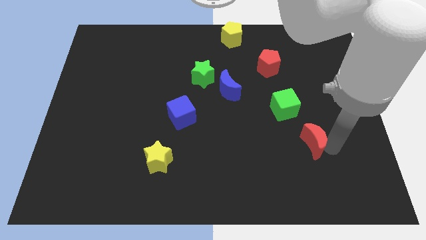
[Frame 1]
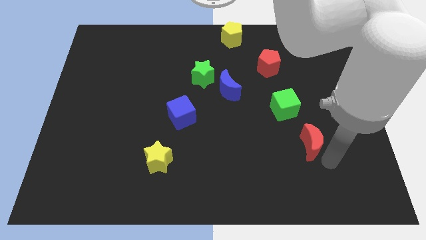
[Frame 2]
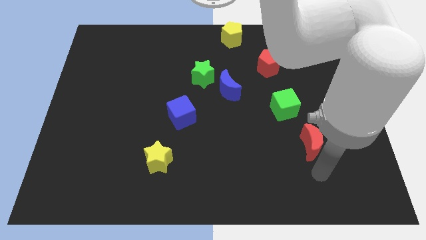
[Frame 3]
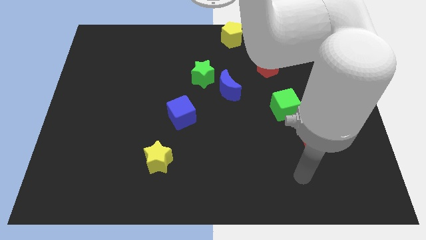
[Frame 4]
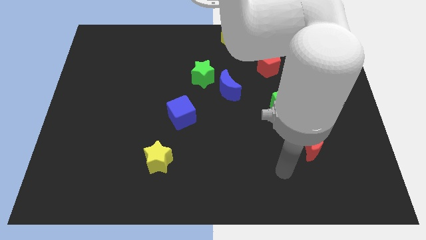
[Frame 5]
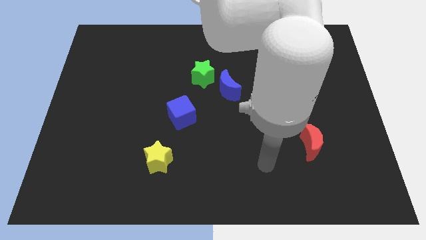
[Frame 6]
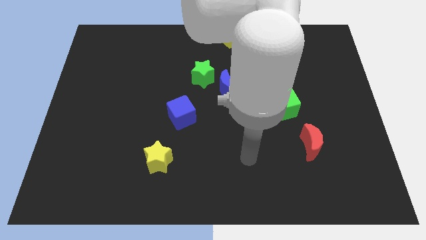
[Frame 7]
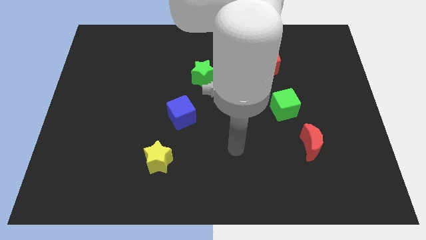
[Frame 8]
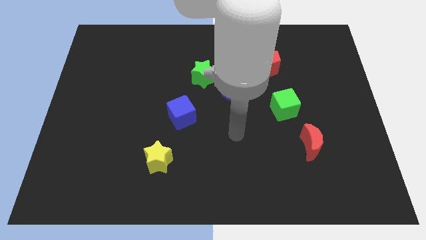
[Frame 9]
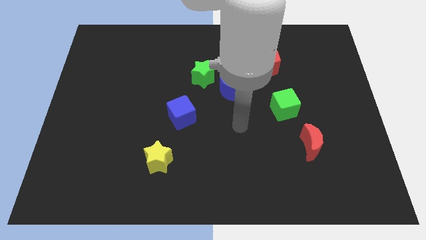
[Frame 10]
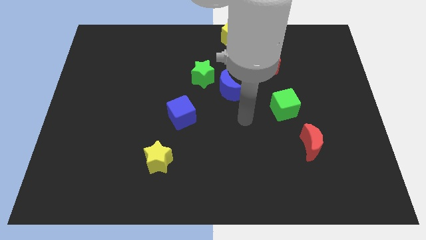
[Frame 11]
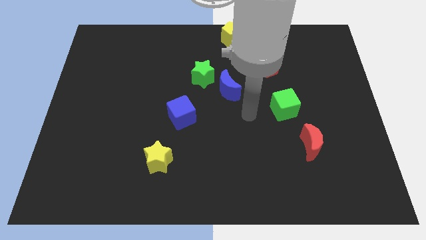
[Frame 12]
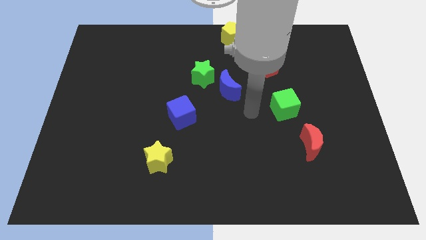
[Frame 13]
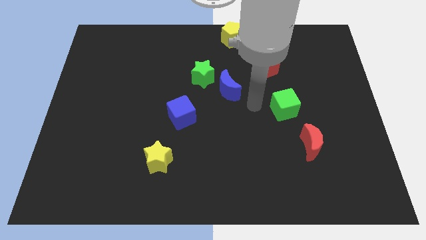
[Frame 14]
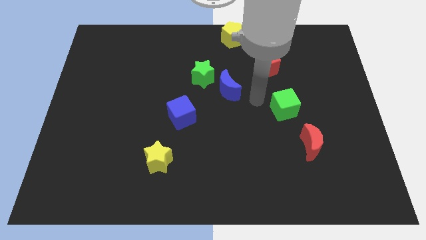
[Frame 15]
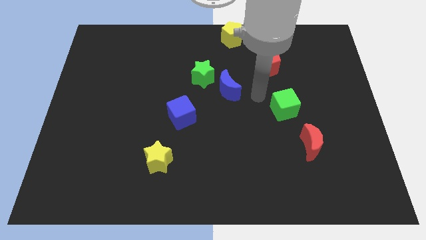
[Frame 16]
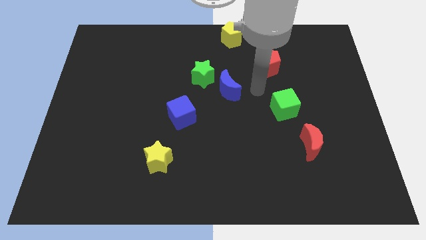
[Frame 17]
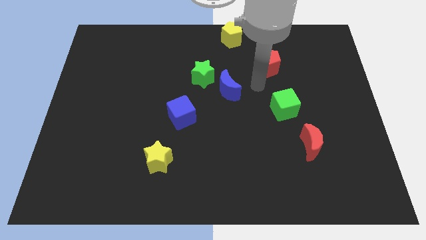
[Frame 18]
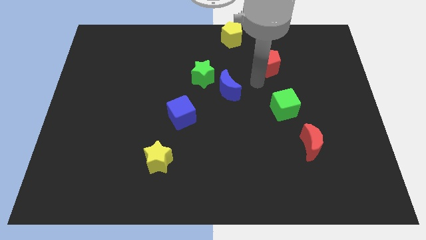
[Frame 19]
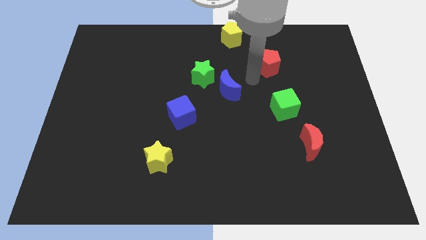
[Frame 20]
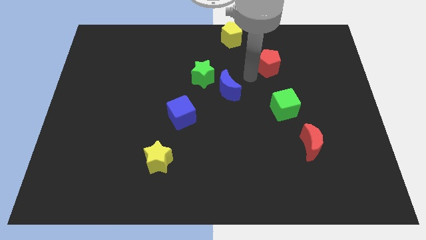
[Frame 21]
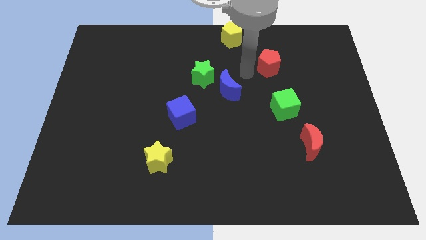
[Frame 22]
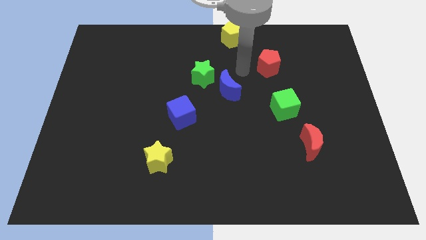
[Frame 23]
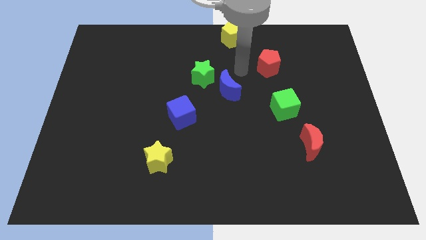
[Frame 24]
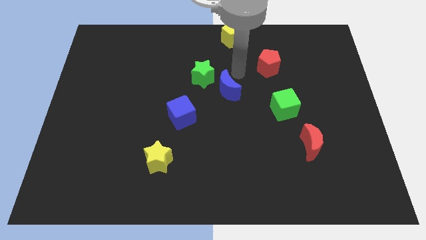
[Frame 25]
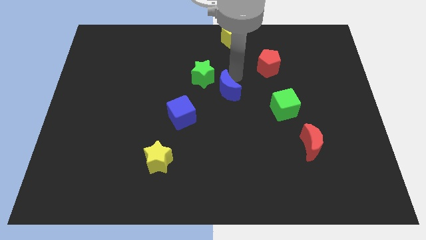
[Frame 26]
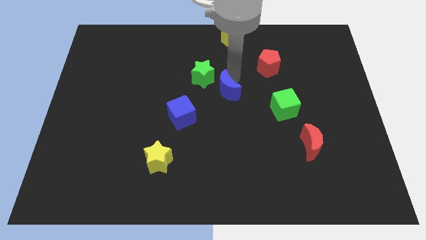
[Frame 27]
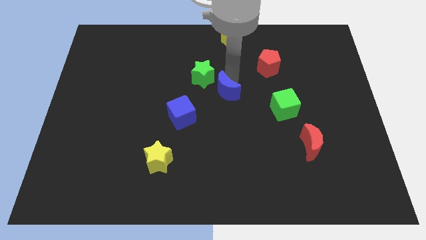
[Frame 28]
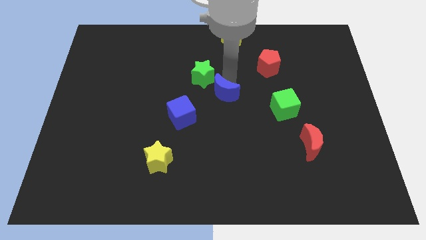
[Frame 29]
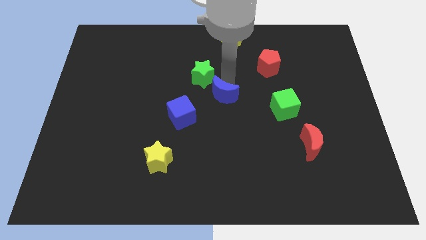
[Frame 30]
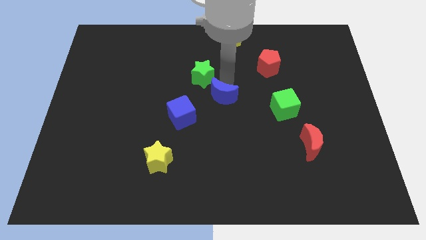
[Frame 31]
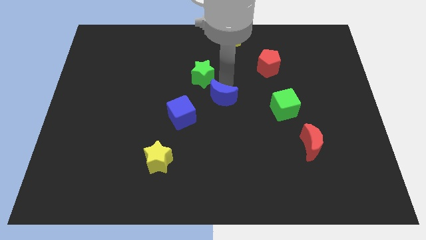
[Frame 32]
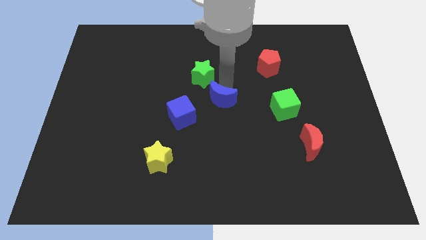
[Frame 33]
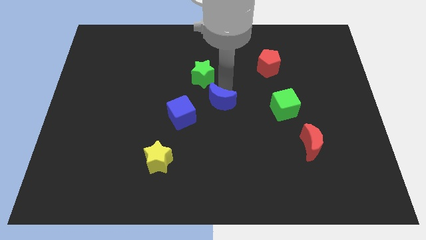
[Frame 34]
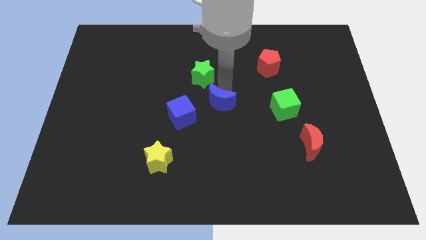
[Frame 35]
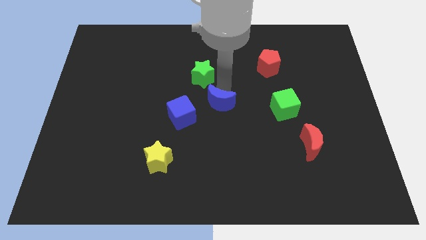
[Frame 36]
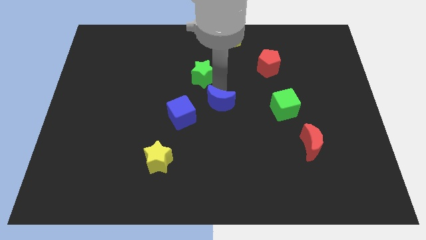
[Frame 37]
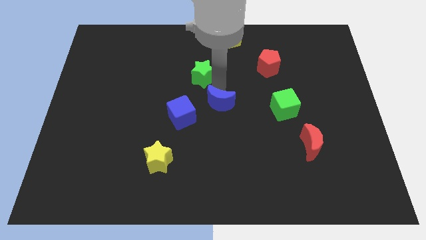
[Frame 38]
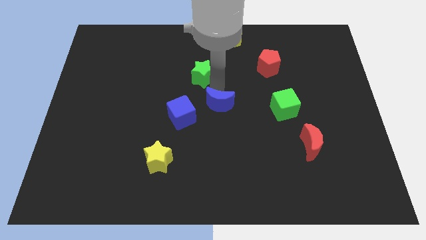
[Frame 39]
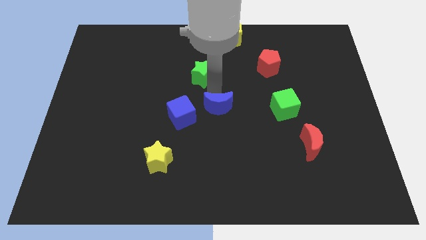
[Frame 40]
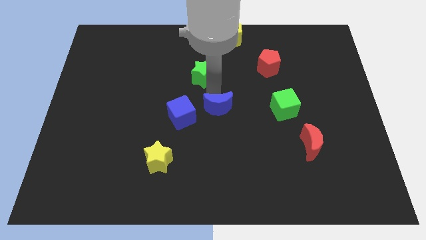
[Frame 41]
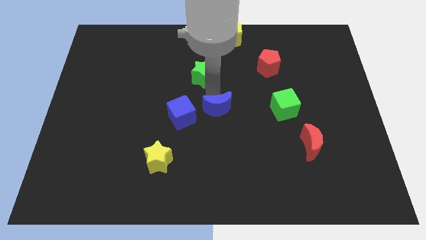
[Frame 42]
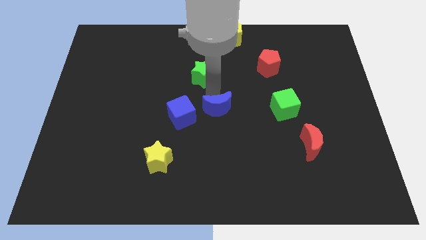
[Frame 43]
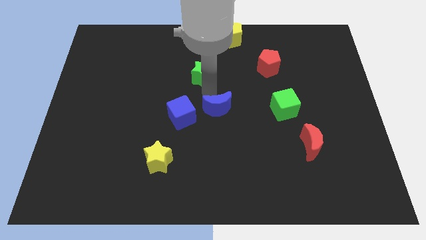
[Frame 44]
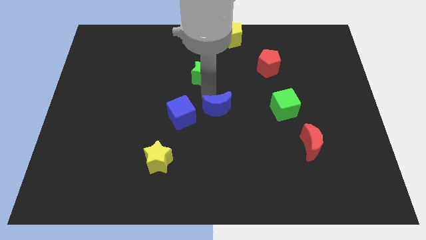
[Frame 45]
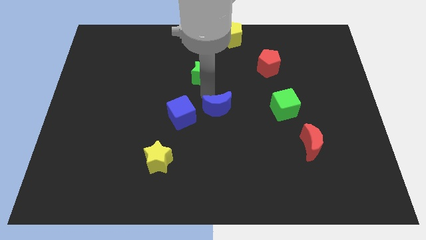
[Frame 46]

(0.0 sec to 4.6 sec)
put the blue moon parallel to the blue cube

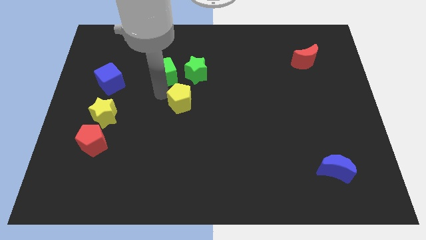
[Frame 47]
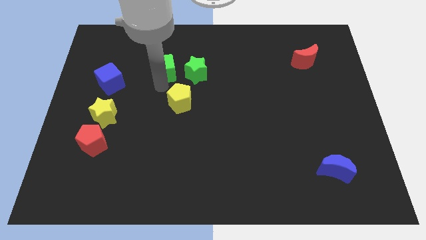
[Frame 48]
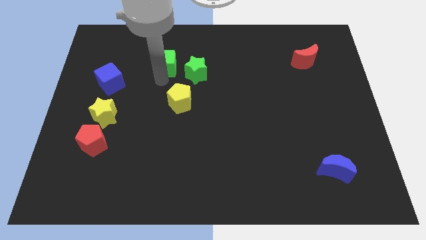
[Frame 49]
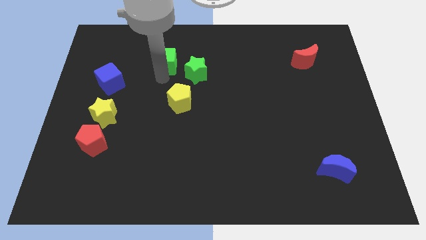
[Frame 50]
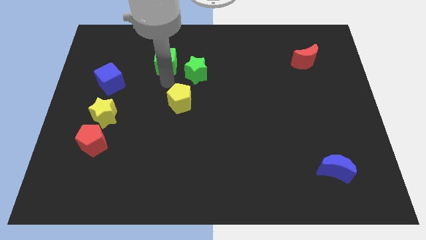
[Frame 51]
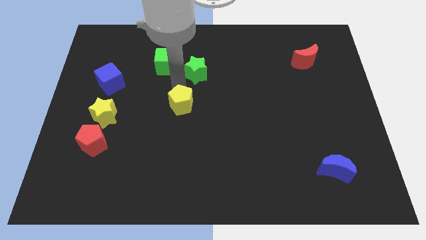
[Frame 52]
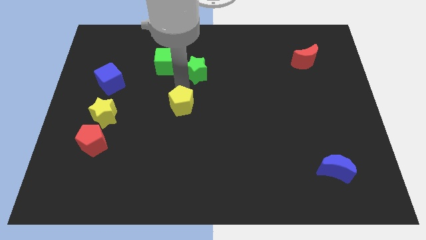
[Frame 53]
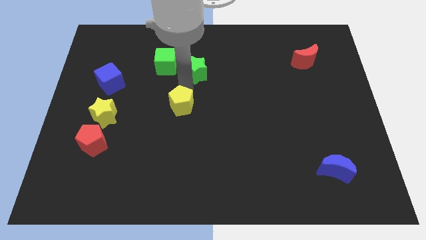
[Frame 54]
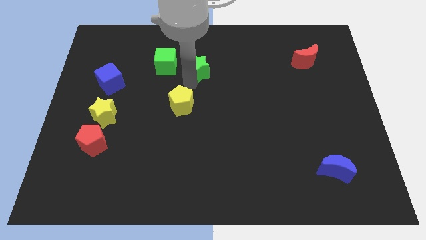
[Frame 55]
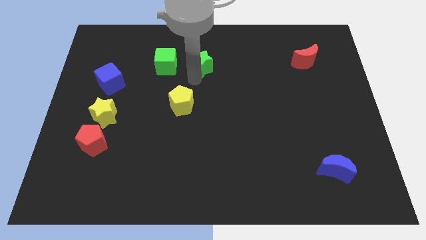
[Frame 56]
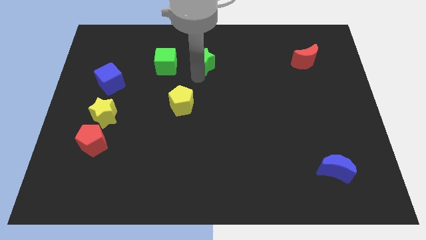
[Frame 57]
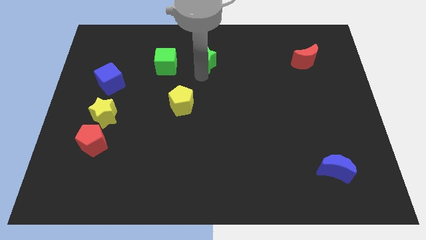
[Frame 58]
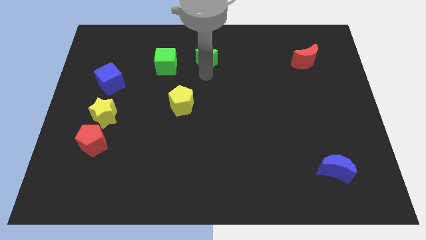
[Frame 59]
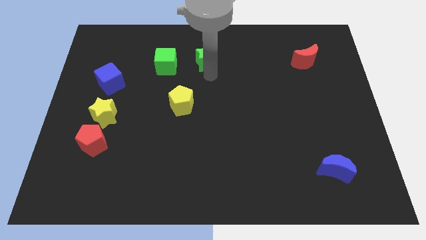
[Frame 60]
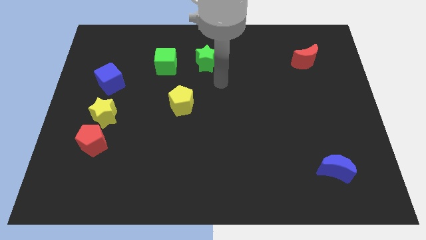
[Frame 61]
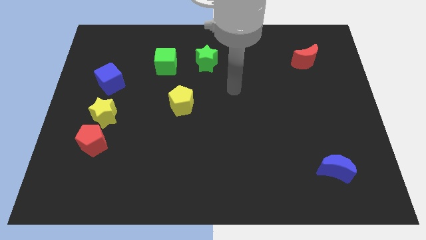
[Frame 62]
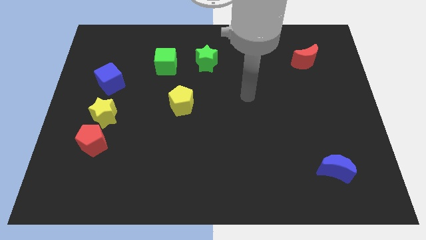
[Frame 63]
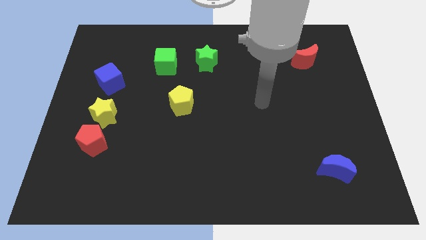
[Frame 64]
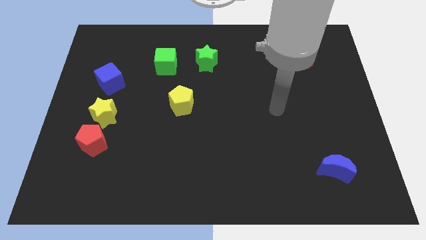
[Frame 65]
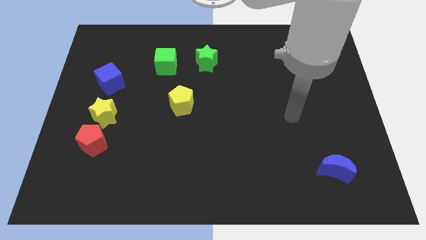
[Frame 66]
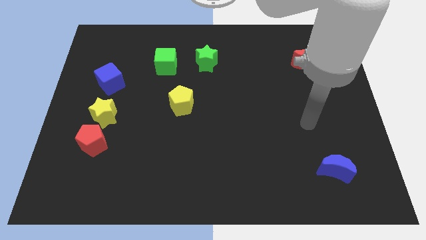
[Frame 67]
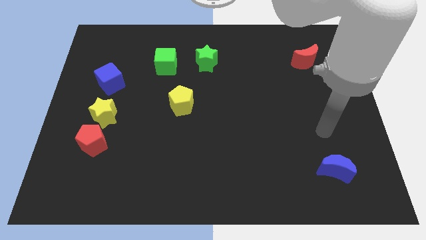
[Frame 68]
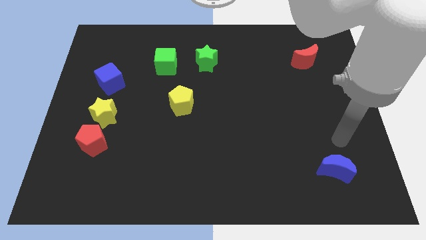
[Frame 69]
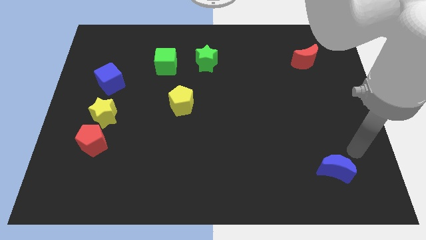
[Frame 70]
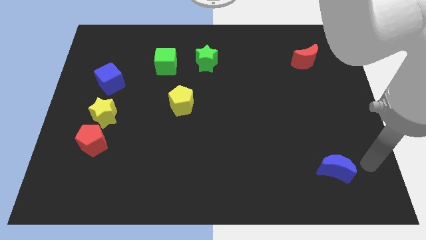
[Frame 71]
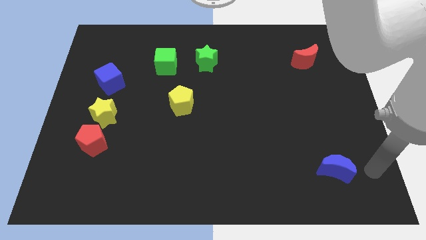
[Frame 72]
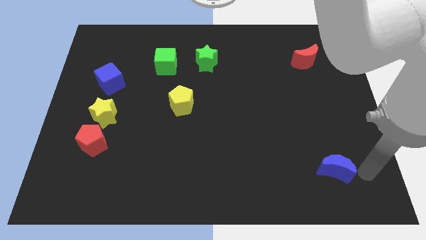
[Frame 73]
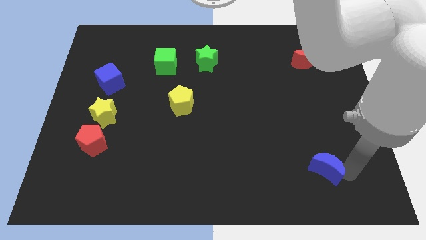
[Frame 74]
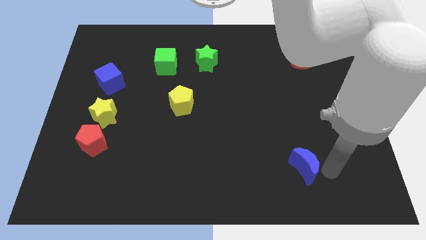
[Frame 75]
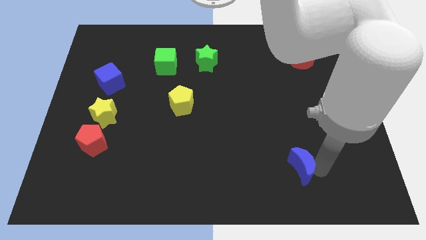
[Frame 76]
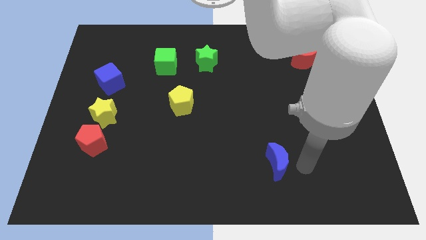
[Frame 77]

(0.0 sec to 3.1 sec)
slightly push the green star to the top

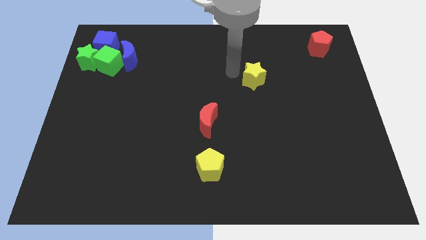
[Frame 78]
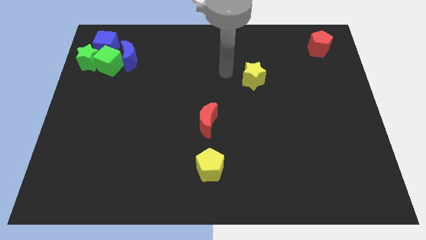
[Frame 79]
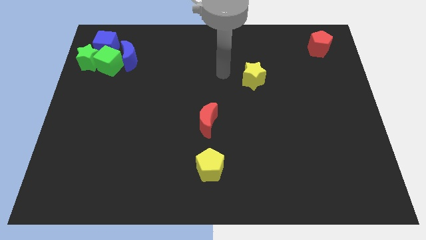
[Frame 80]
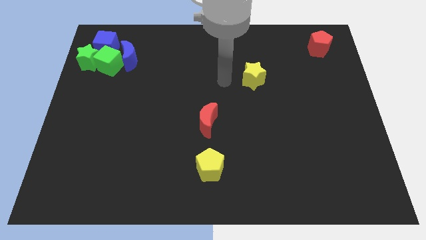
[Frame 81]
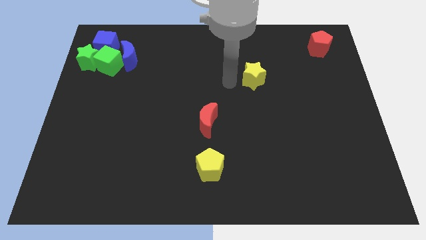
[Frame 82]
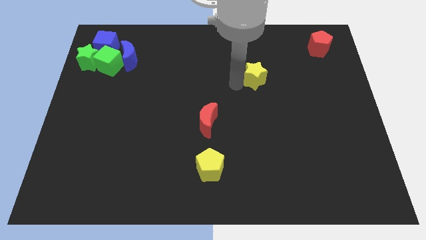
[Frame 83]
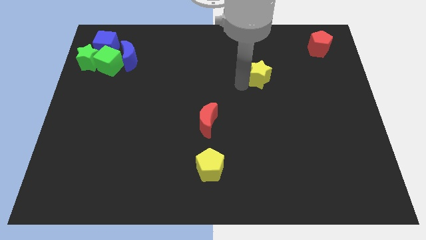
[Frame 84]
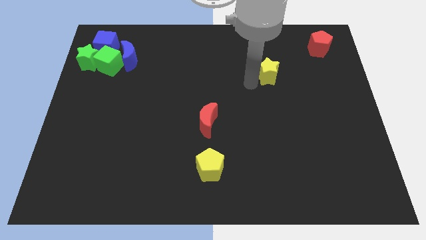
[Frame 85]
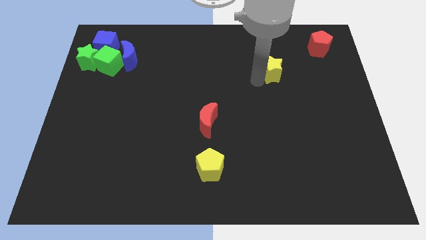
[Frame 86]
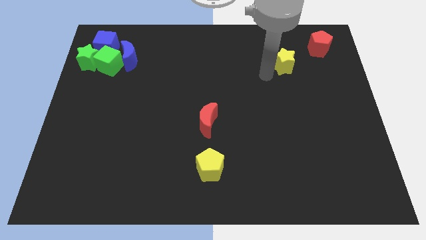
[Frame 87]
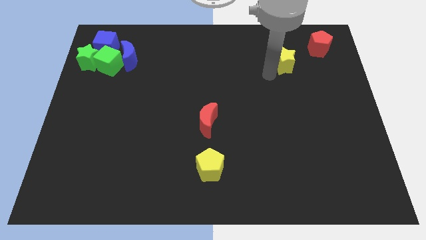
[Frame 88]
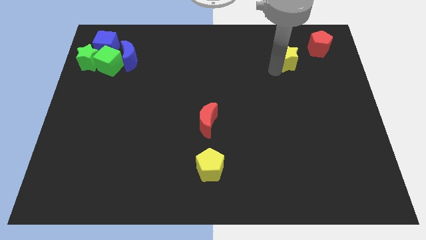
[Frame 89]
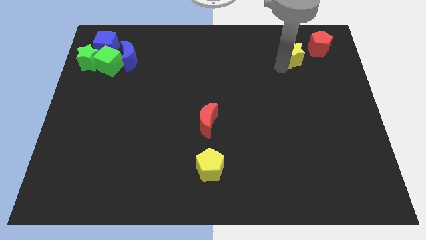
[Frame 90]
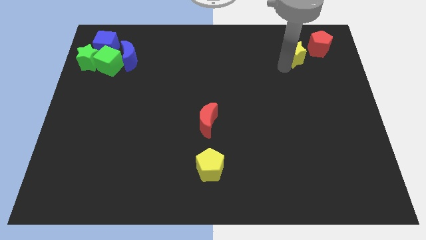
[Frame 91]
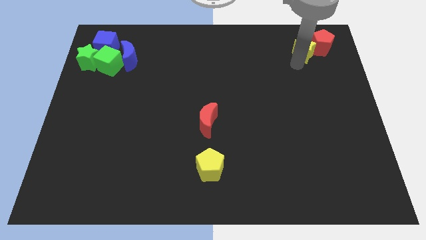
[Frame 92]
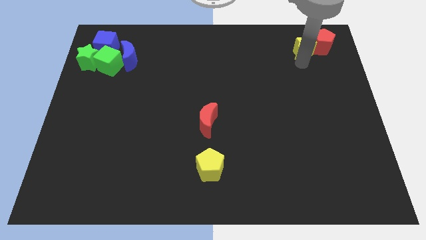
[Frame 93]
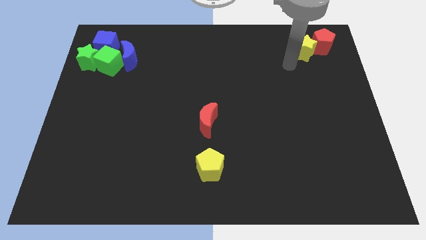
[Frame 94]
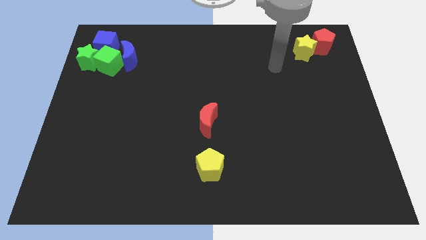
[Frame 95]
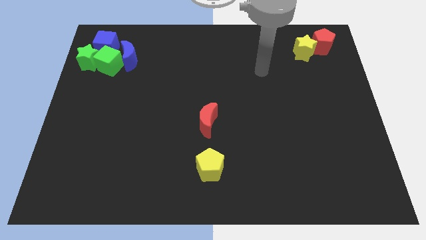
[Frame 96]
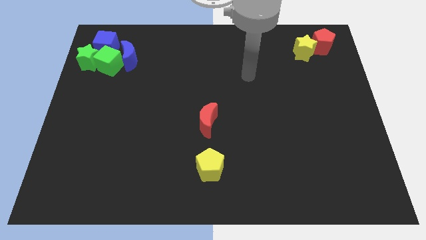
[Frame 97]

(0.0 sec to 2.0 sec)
move yellow star into red pentagon
